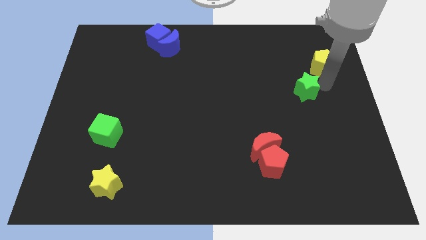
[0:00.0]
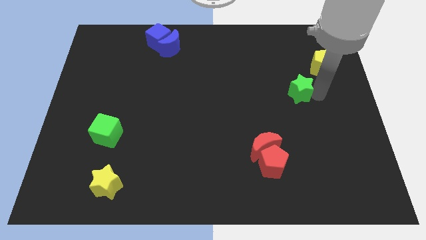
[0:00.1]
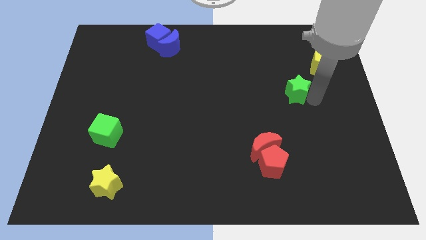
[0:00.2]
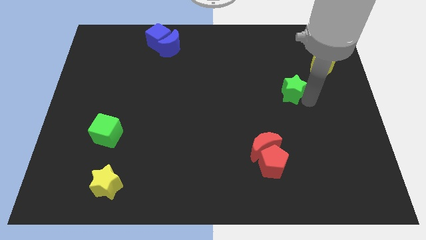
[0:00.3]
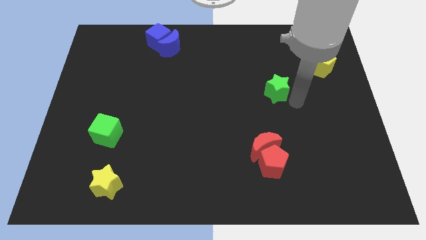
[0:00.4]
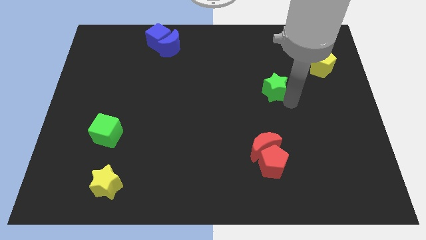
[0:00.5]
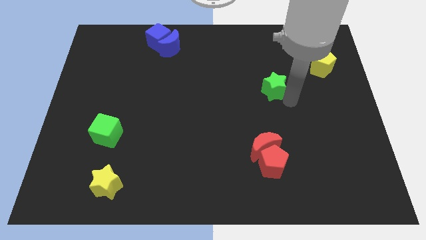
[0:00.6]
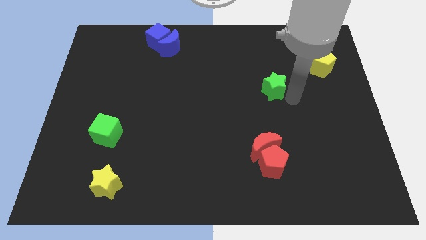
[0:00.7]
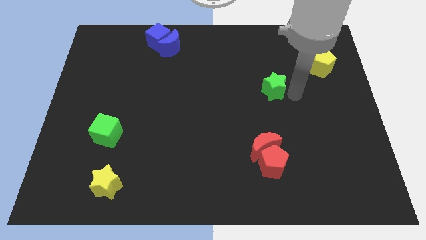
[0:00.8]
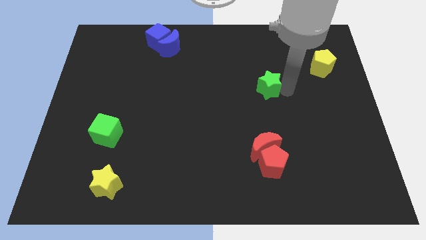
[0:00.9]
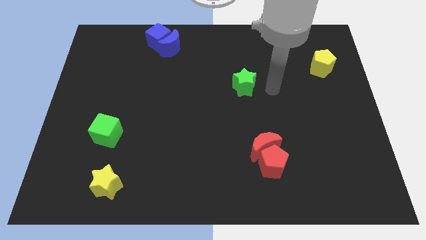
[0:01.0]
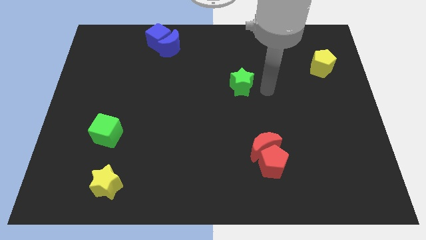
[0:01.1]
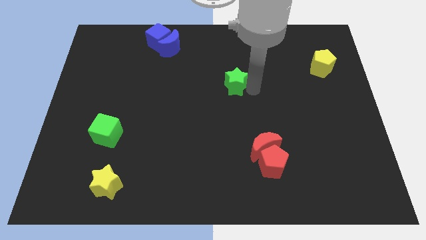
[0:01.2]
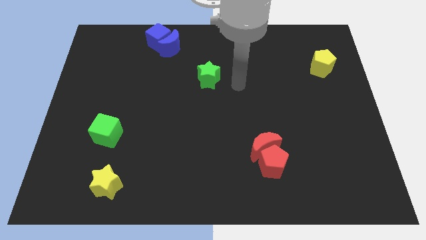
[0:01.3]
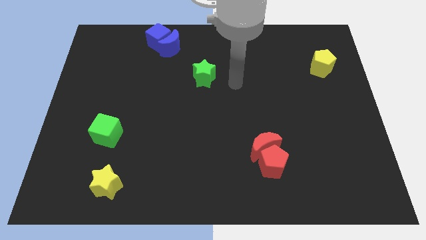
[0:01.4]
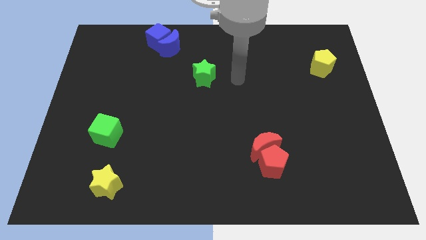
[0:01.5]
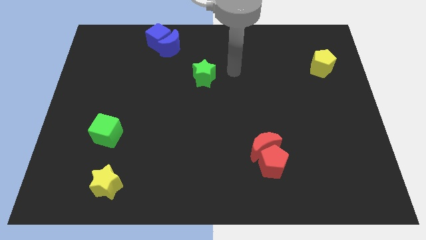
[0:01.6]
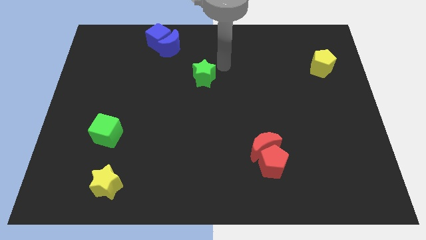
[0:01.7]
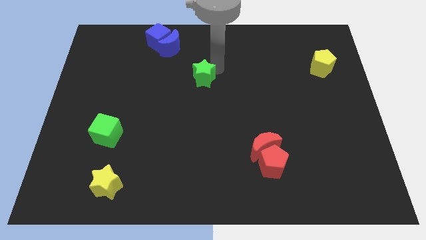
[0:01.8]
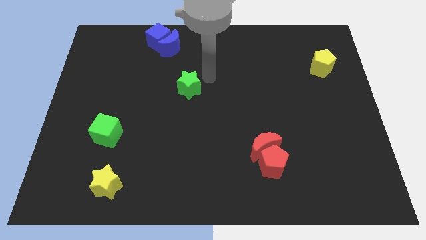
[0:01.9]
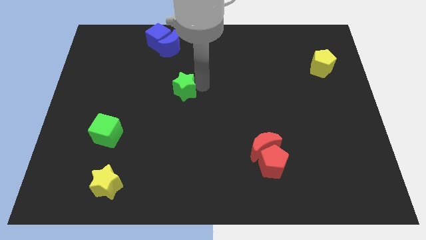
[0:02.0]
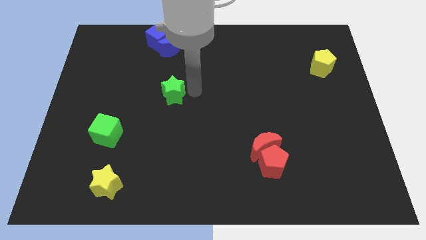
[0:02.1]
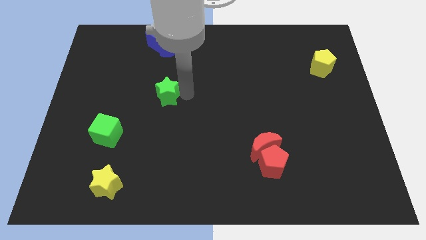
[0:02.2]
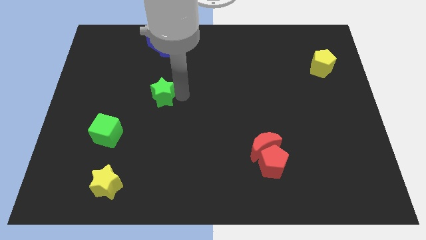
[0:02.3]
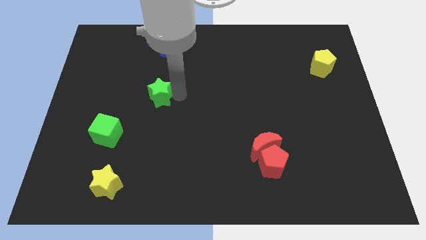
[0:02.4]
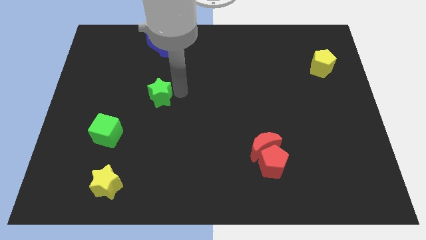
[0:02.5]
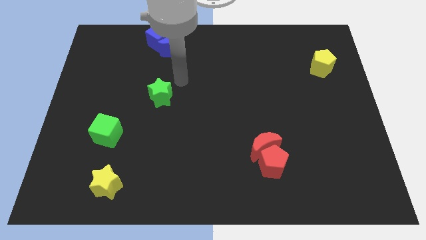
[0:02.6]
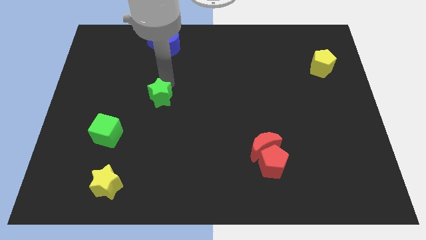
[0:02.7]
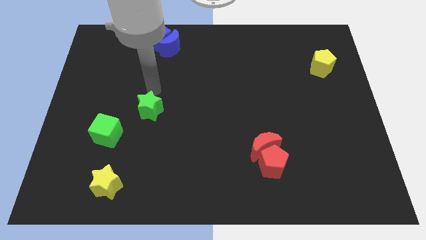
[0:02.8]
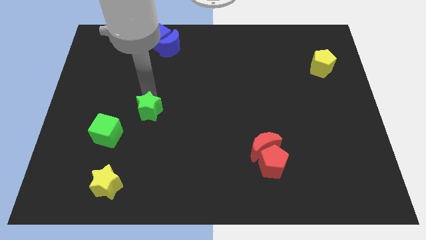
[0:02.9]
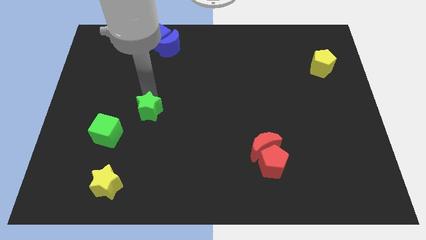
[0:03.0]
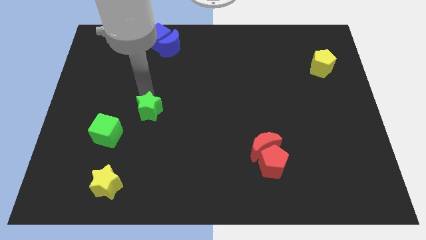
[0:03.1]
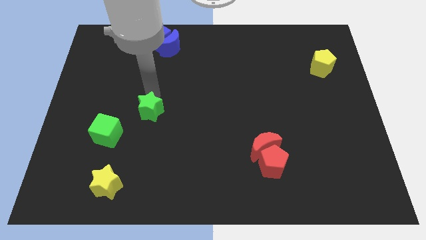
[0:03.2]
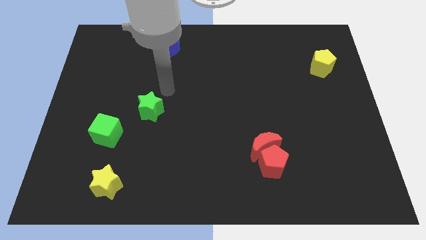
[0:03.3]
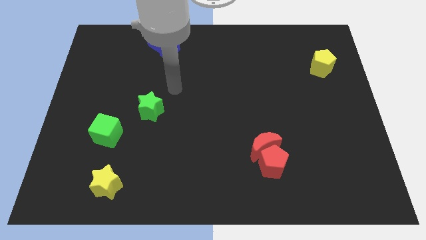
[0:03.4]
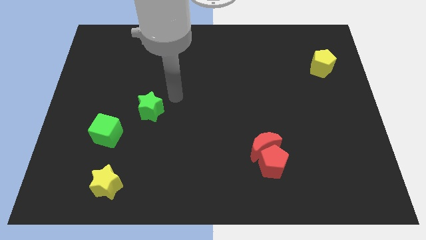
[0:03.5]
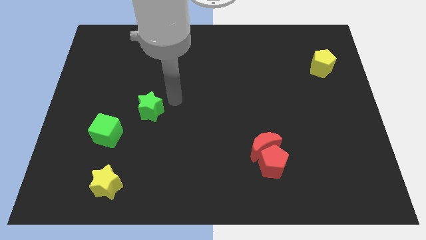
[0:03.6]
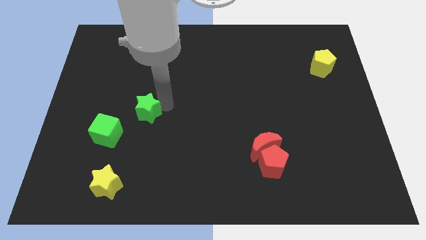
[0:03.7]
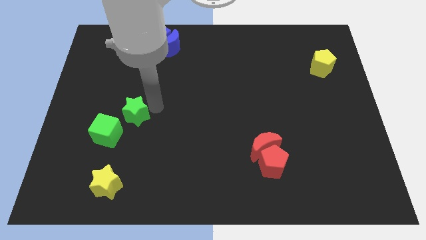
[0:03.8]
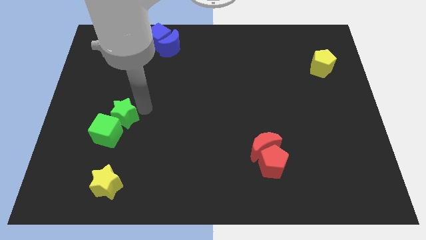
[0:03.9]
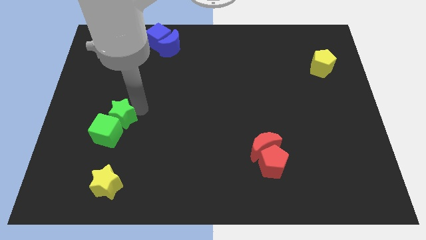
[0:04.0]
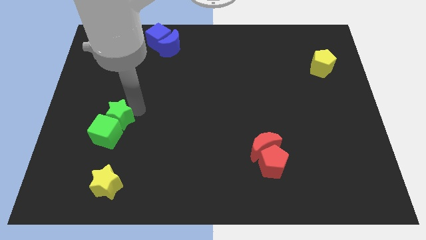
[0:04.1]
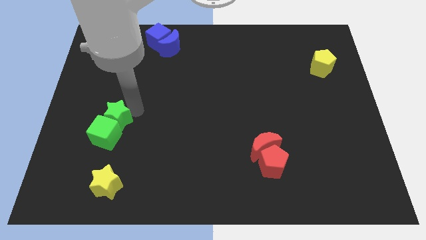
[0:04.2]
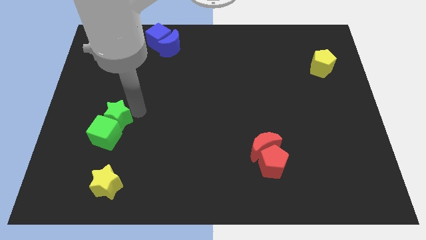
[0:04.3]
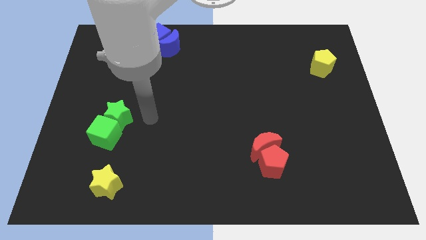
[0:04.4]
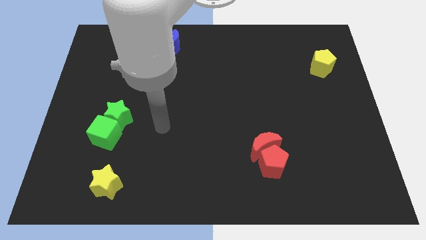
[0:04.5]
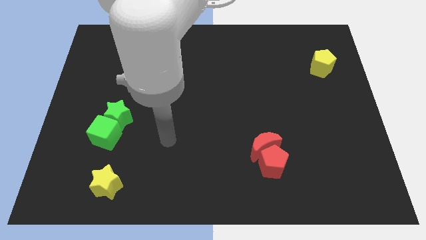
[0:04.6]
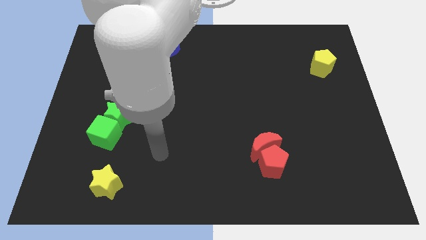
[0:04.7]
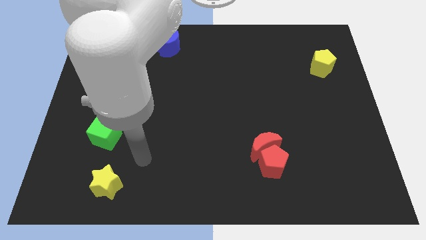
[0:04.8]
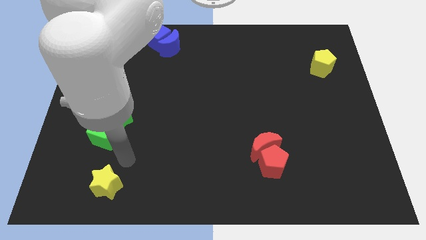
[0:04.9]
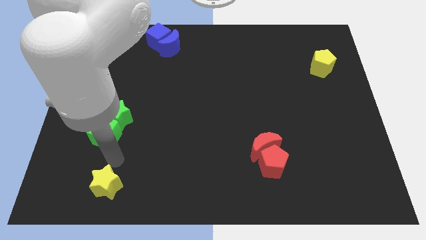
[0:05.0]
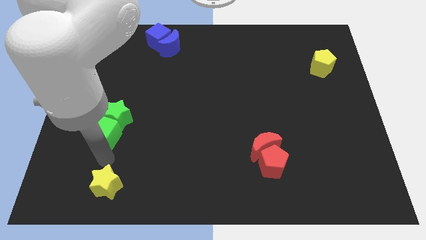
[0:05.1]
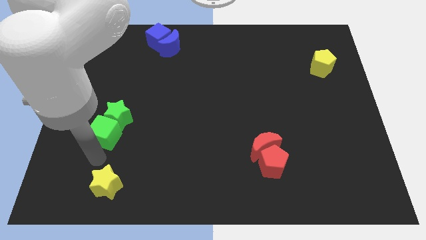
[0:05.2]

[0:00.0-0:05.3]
slide the green star into the green cube

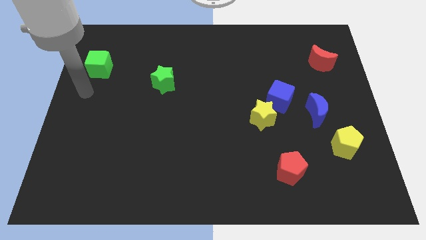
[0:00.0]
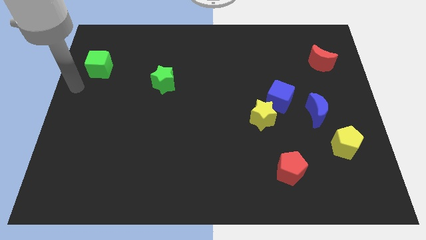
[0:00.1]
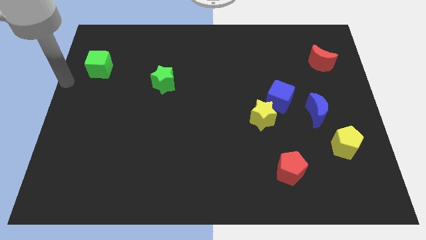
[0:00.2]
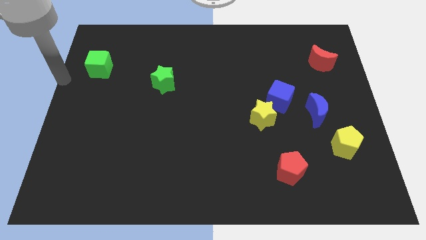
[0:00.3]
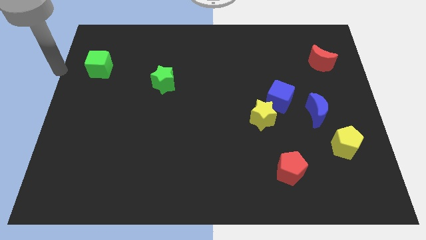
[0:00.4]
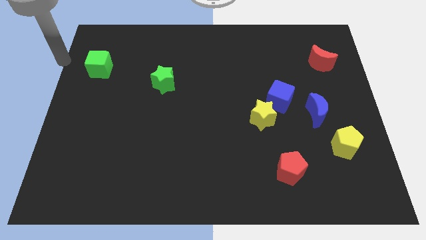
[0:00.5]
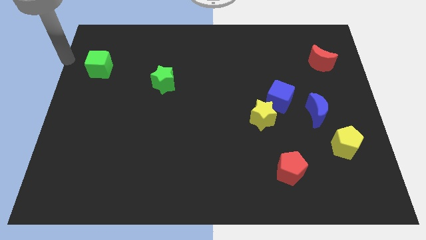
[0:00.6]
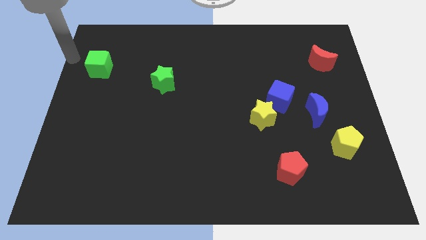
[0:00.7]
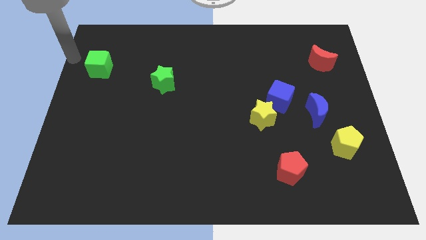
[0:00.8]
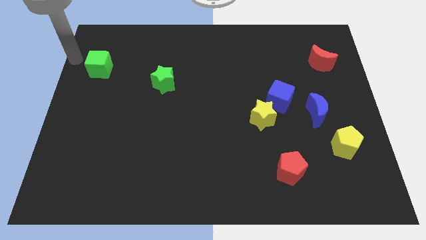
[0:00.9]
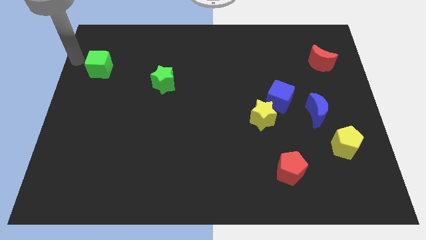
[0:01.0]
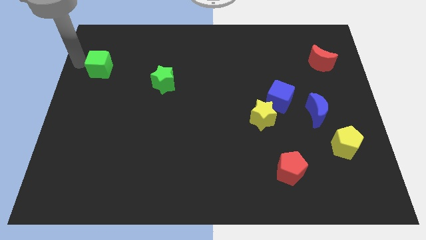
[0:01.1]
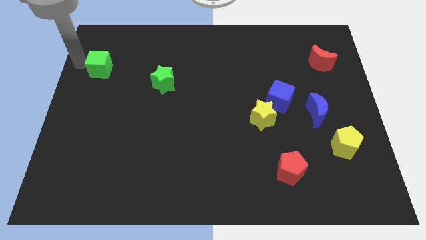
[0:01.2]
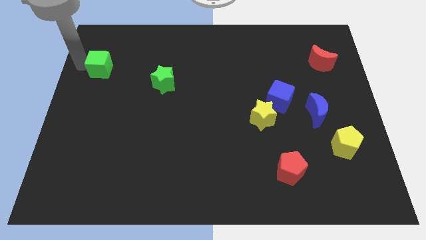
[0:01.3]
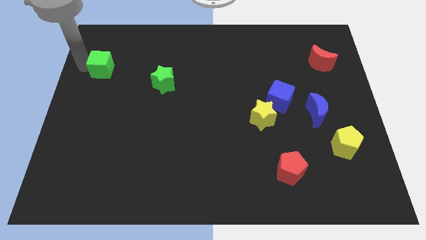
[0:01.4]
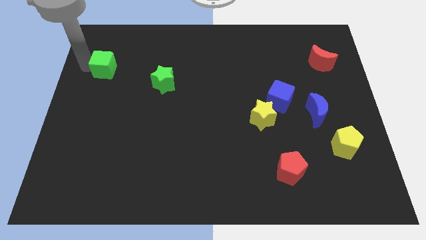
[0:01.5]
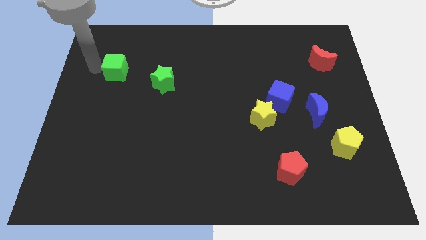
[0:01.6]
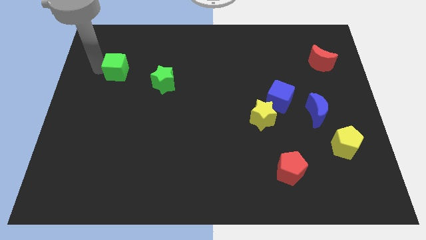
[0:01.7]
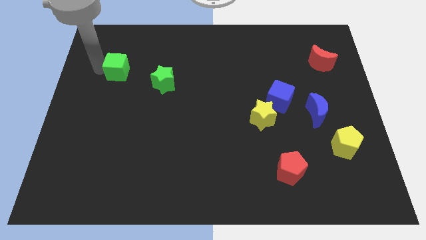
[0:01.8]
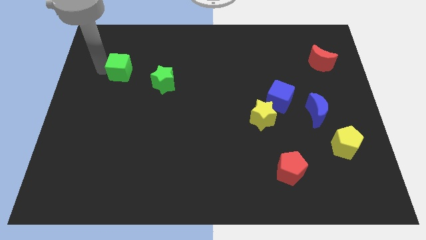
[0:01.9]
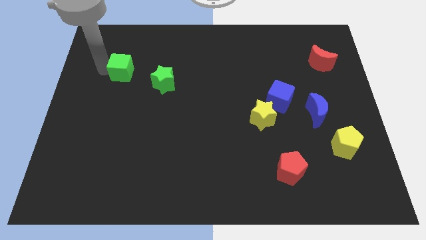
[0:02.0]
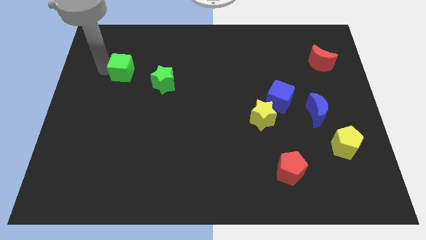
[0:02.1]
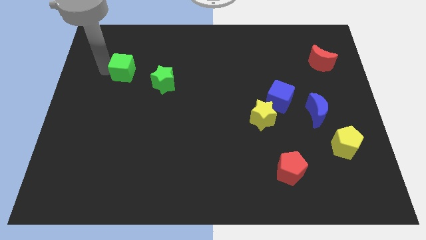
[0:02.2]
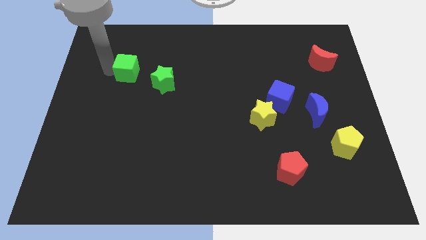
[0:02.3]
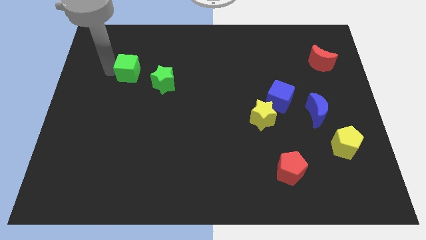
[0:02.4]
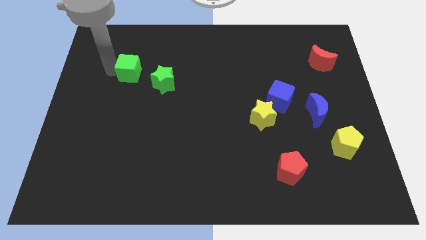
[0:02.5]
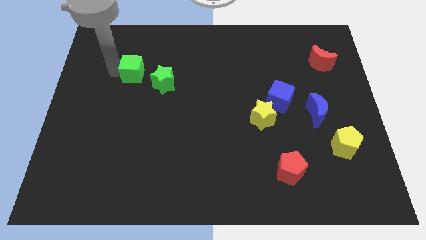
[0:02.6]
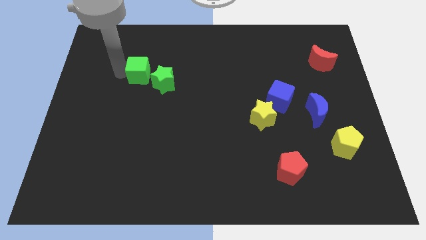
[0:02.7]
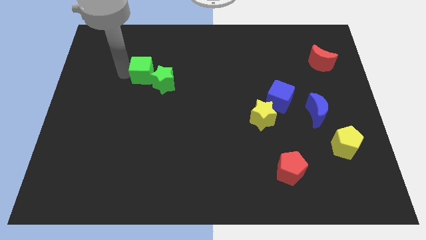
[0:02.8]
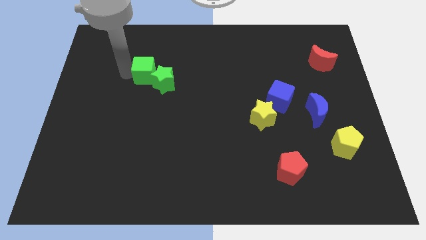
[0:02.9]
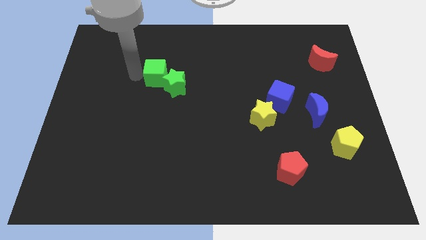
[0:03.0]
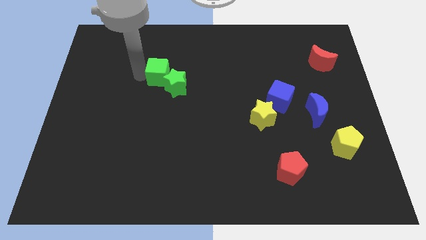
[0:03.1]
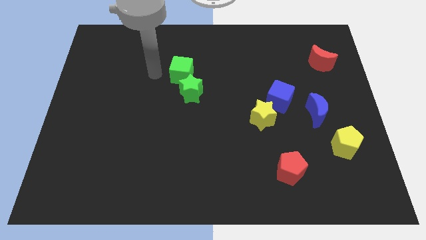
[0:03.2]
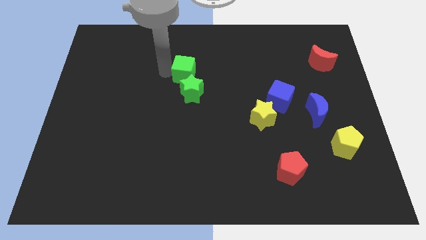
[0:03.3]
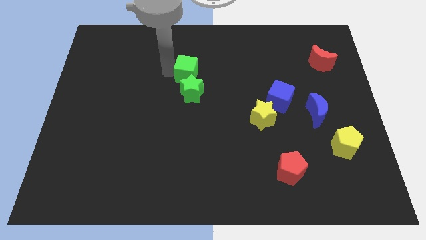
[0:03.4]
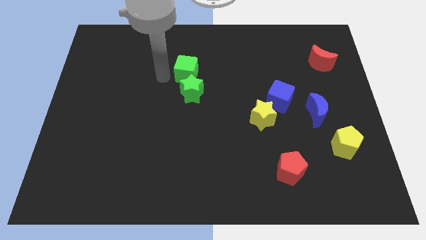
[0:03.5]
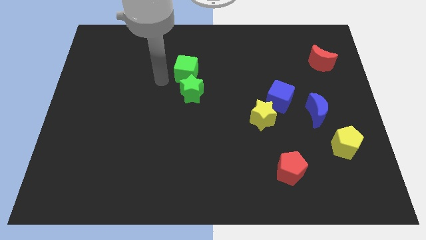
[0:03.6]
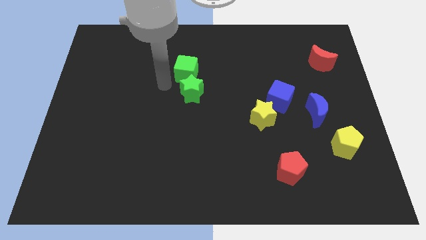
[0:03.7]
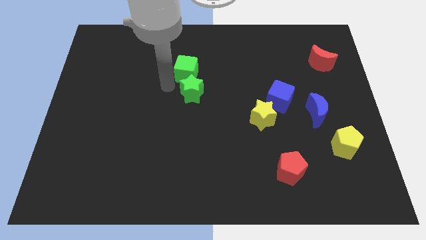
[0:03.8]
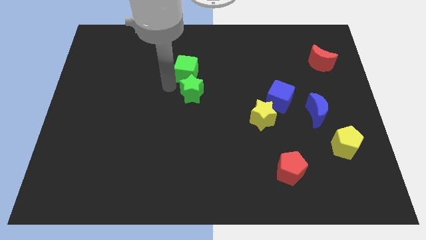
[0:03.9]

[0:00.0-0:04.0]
push green cube in to green star
